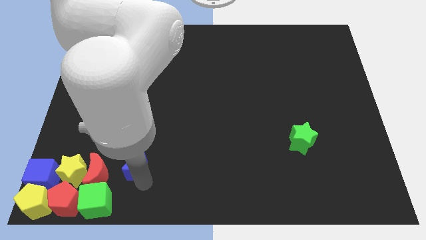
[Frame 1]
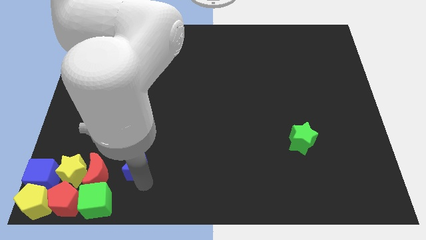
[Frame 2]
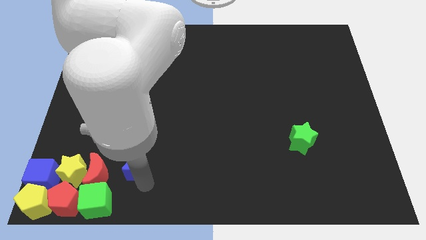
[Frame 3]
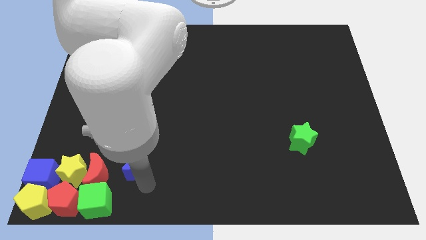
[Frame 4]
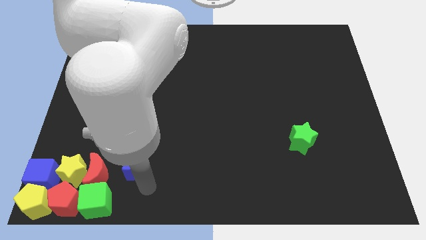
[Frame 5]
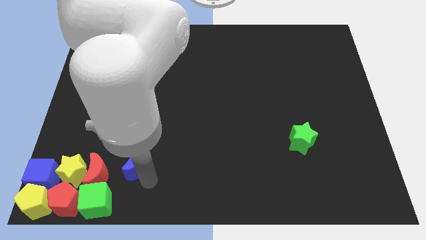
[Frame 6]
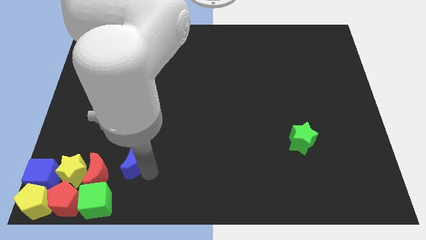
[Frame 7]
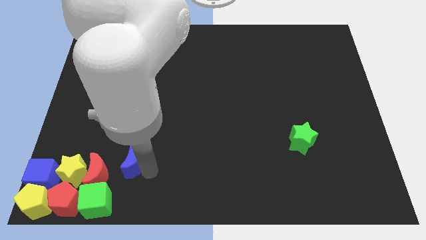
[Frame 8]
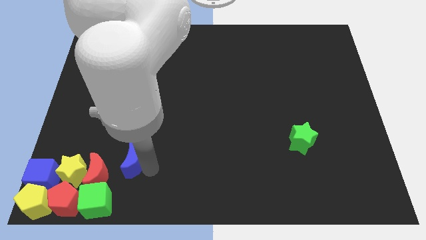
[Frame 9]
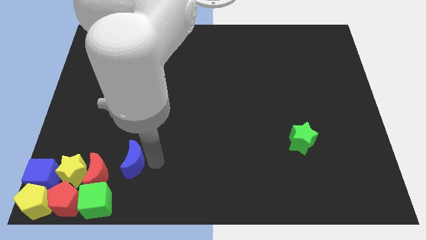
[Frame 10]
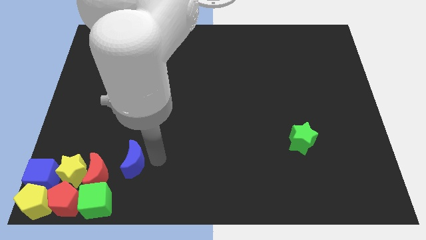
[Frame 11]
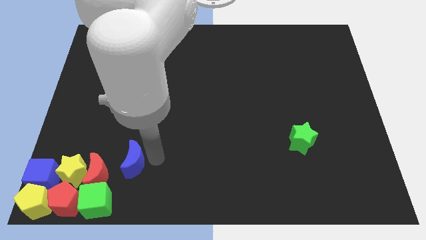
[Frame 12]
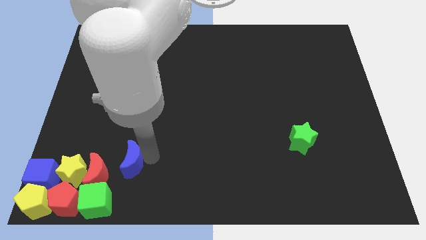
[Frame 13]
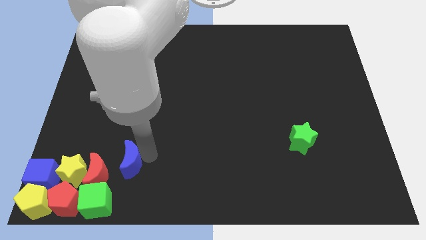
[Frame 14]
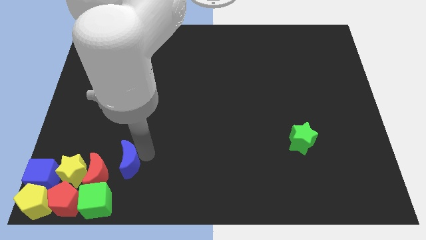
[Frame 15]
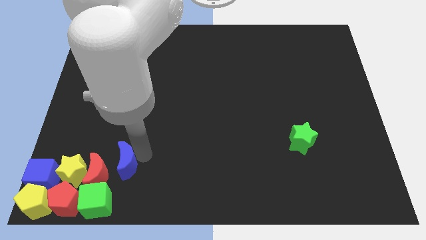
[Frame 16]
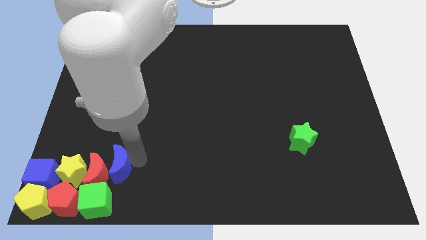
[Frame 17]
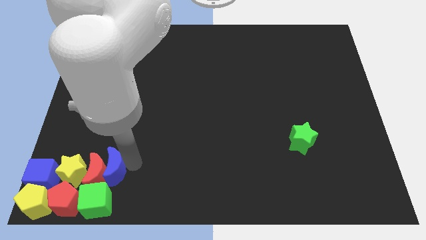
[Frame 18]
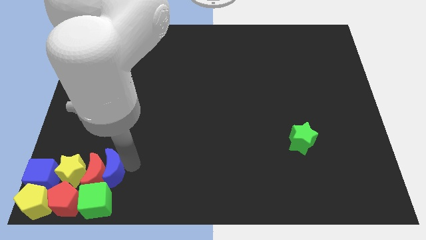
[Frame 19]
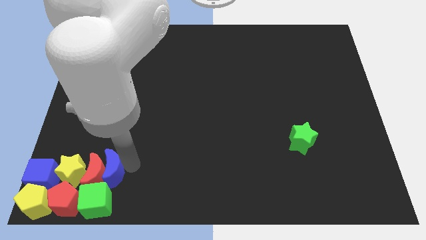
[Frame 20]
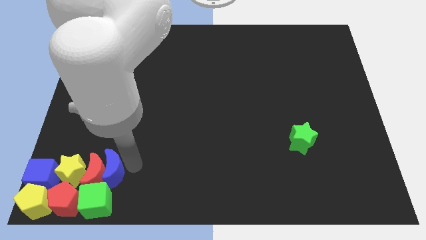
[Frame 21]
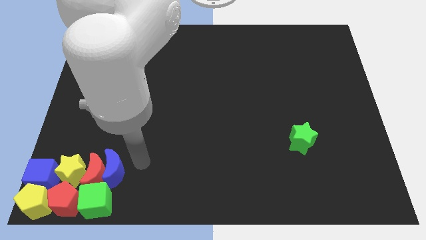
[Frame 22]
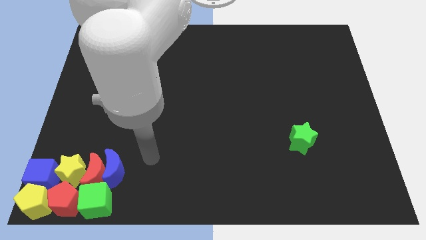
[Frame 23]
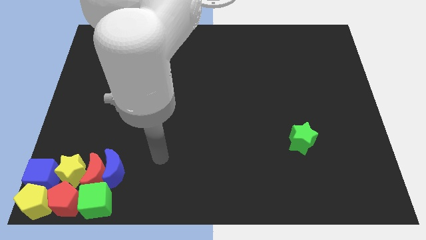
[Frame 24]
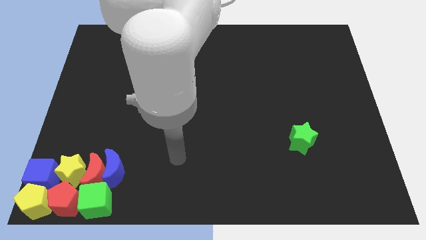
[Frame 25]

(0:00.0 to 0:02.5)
place the blue moon vertically above the red moon

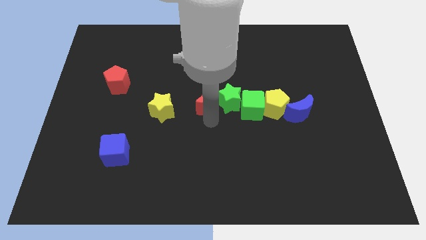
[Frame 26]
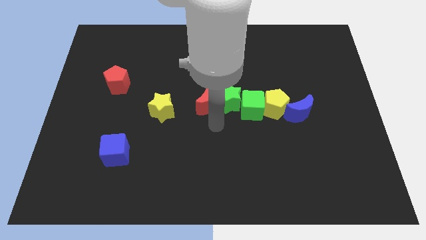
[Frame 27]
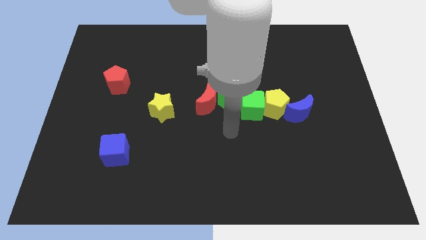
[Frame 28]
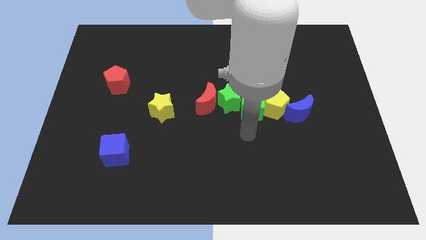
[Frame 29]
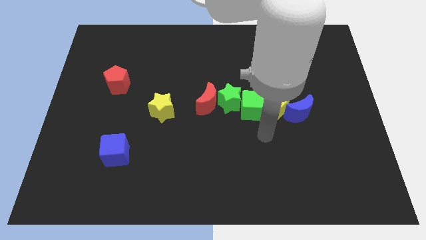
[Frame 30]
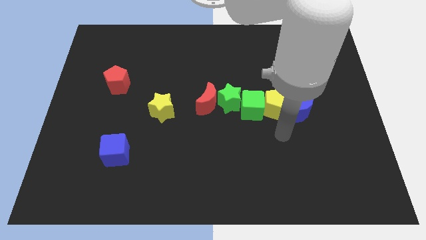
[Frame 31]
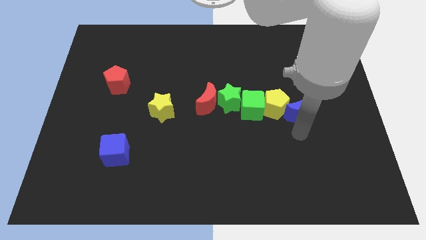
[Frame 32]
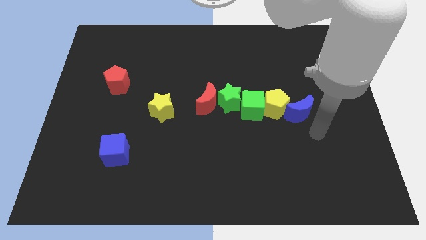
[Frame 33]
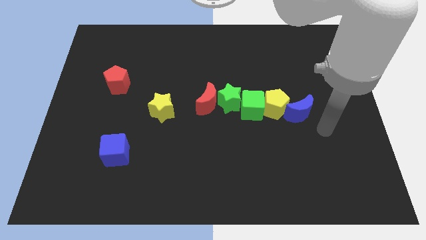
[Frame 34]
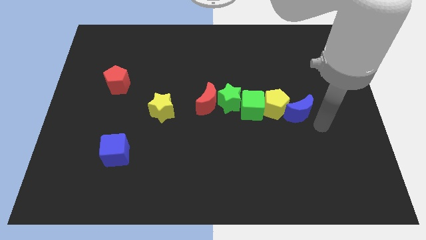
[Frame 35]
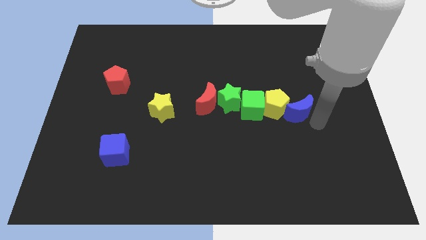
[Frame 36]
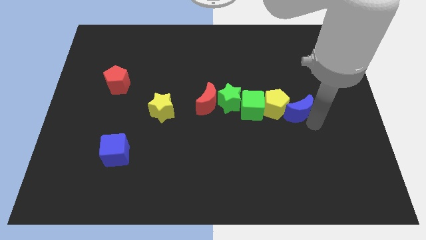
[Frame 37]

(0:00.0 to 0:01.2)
move your arm towards the blue crescent

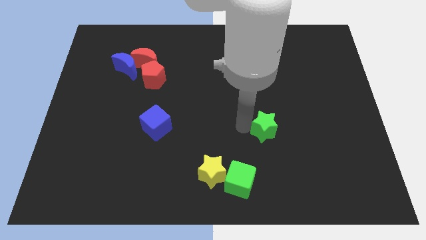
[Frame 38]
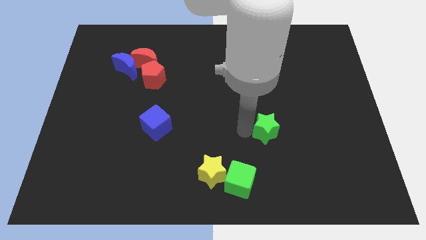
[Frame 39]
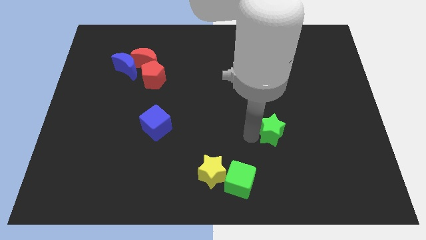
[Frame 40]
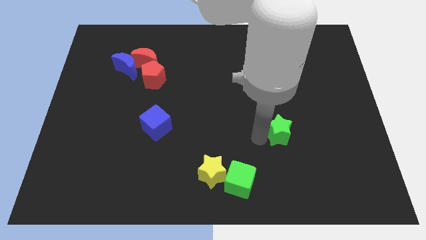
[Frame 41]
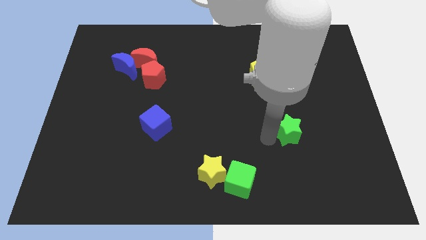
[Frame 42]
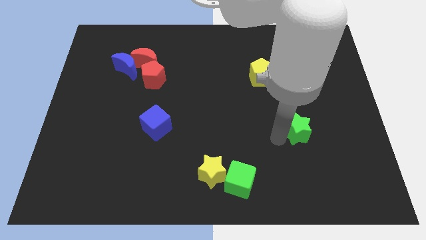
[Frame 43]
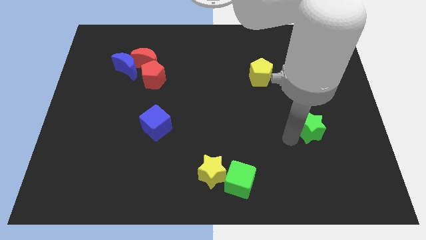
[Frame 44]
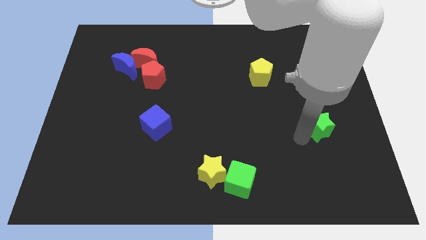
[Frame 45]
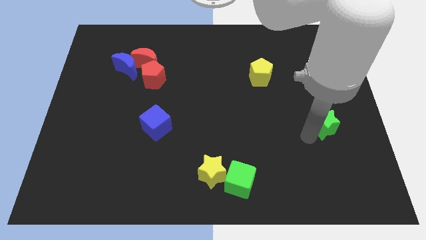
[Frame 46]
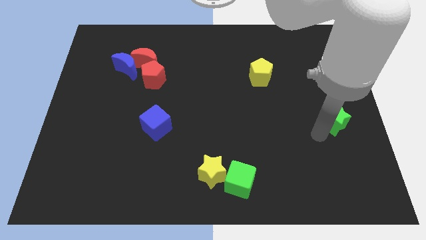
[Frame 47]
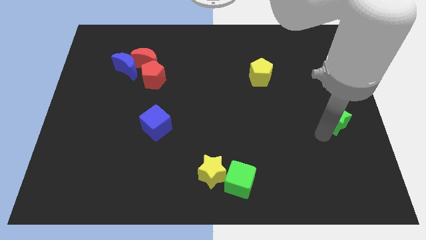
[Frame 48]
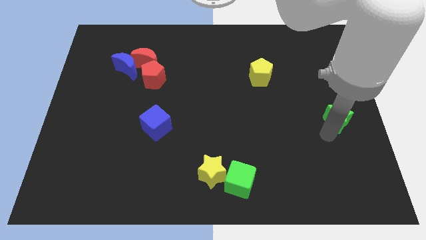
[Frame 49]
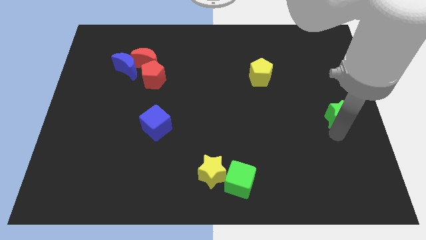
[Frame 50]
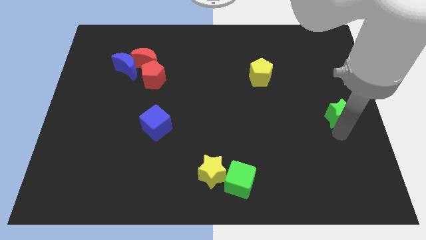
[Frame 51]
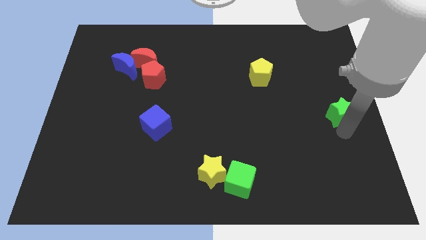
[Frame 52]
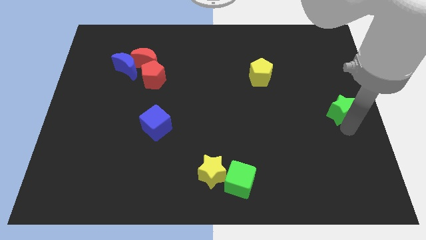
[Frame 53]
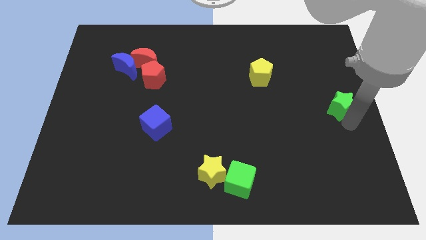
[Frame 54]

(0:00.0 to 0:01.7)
push green star towards center right

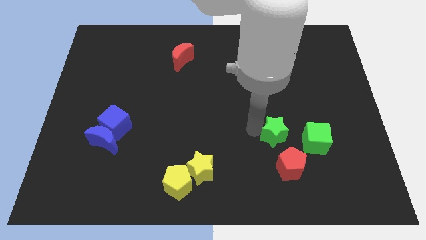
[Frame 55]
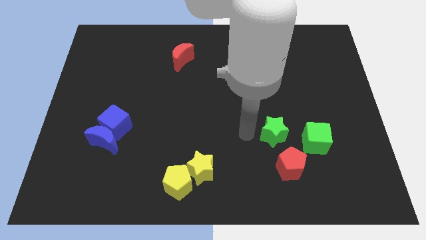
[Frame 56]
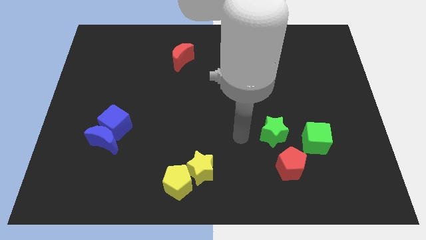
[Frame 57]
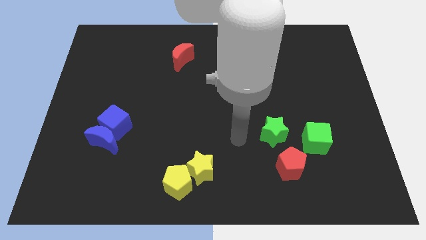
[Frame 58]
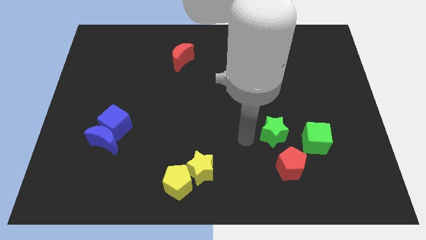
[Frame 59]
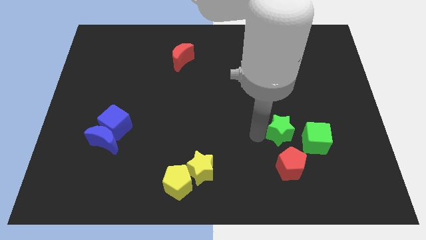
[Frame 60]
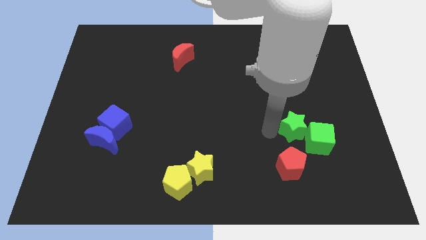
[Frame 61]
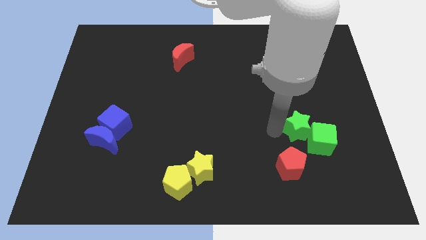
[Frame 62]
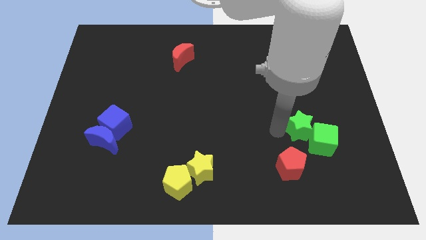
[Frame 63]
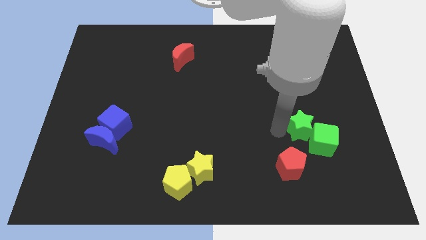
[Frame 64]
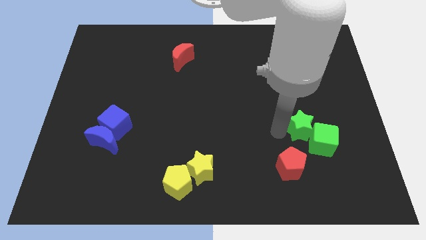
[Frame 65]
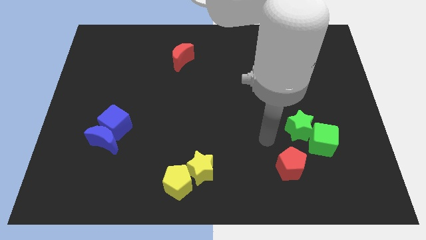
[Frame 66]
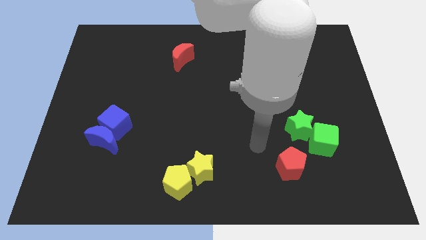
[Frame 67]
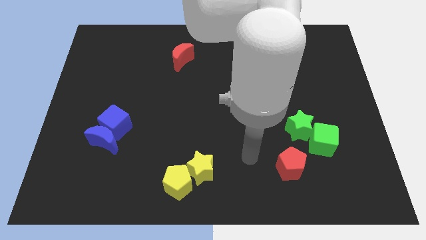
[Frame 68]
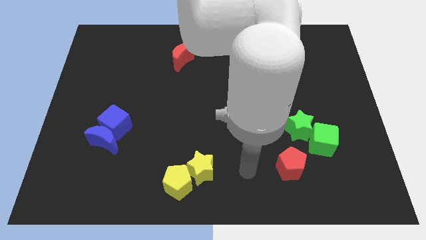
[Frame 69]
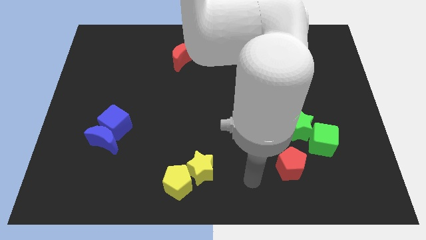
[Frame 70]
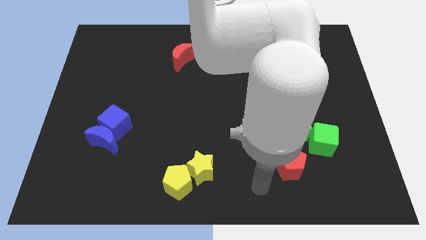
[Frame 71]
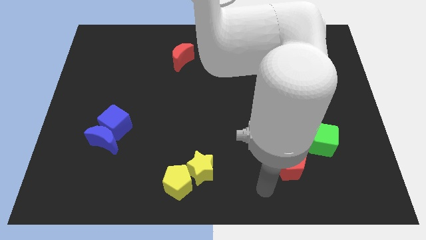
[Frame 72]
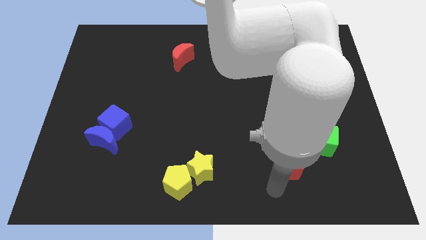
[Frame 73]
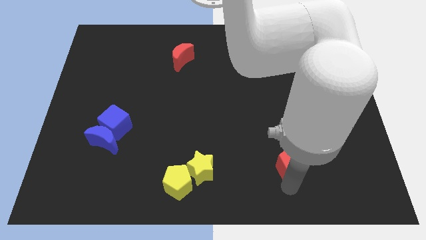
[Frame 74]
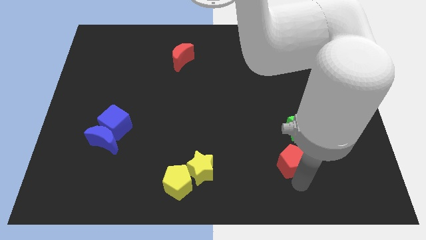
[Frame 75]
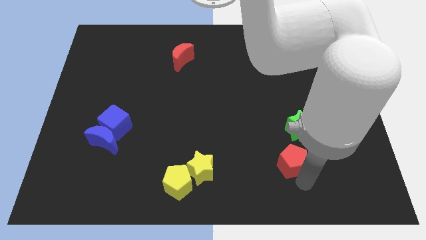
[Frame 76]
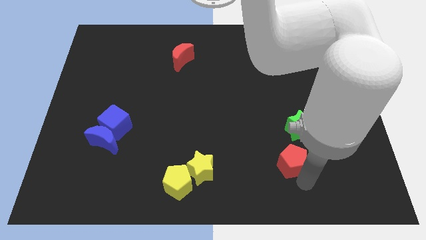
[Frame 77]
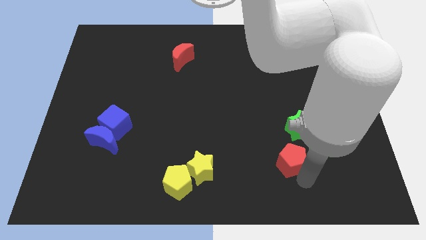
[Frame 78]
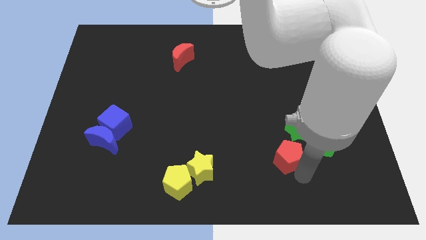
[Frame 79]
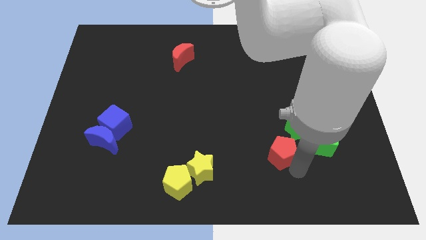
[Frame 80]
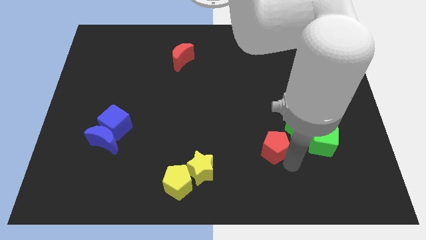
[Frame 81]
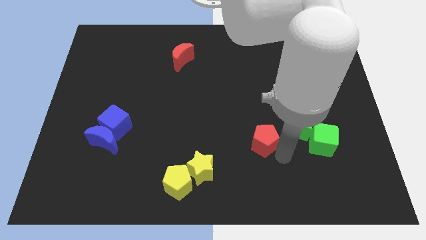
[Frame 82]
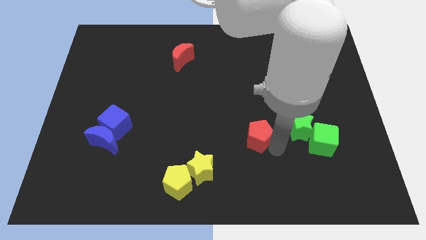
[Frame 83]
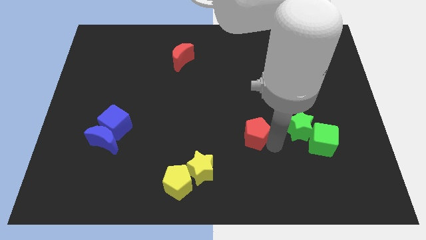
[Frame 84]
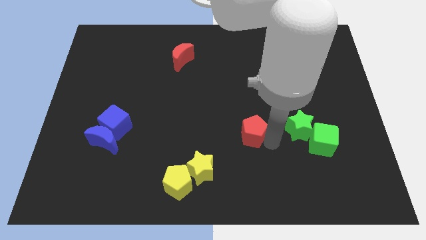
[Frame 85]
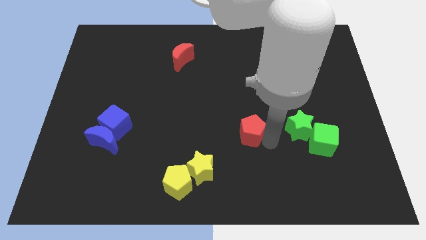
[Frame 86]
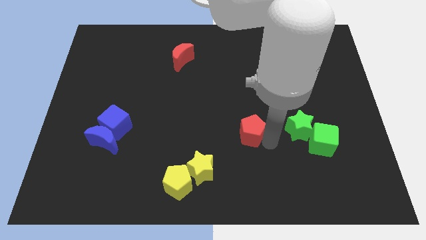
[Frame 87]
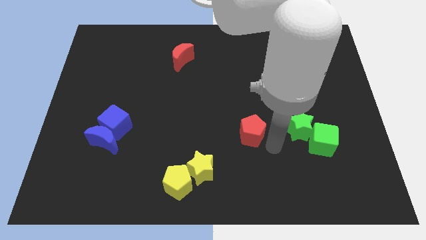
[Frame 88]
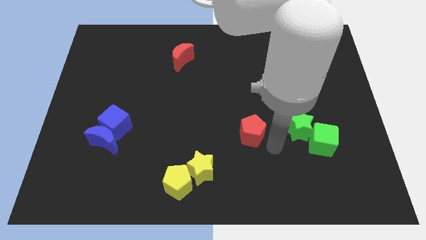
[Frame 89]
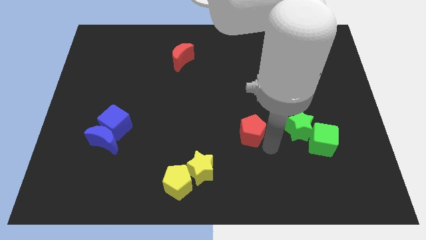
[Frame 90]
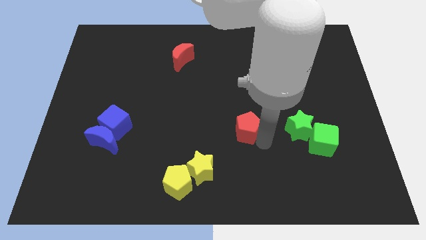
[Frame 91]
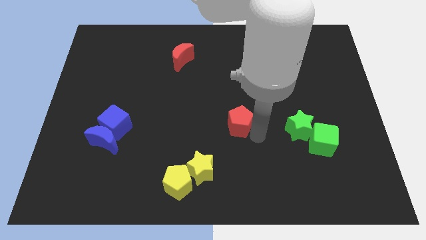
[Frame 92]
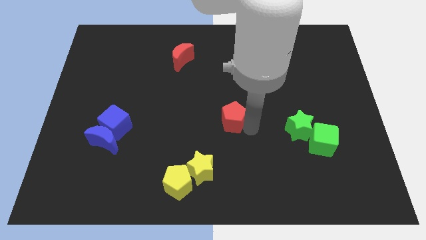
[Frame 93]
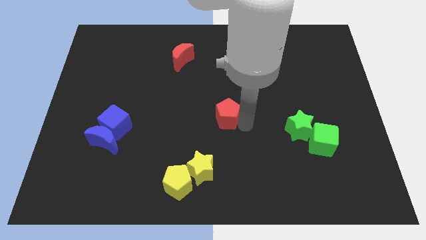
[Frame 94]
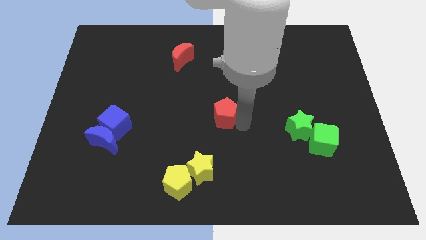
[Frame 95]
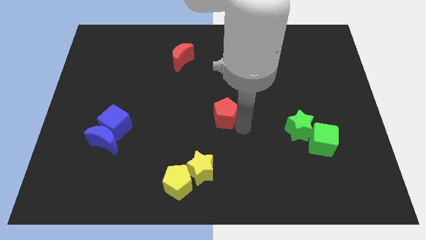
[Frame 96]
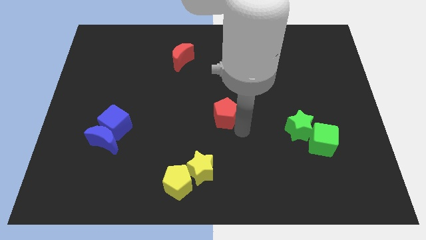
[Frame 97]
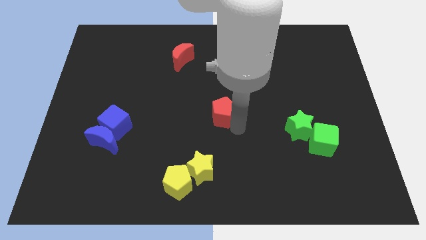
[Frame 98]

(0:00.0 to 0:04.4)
move the red pentagon in between blue cube and green star
